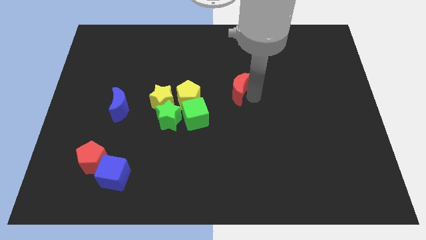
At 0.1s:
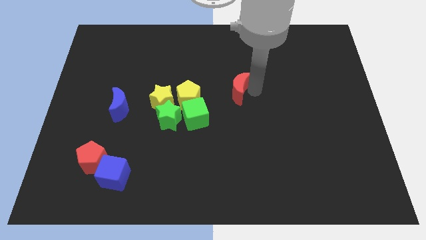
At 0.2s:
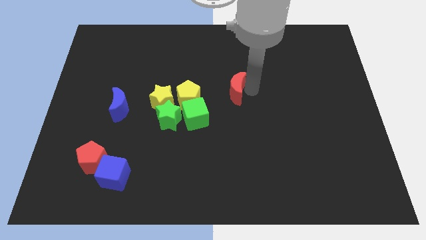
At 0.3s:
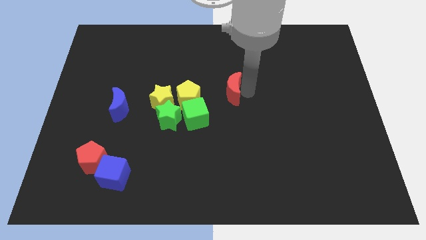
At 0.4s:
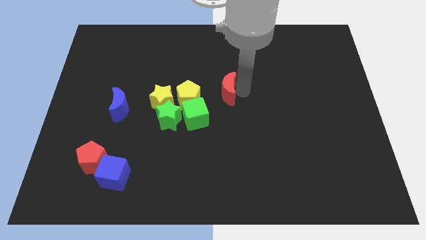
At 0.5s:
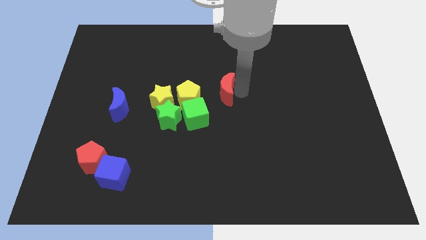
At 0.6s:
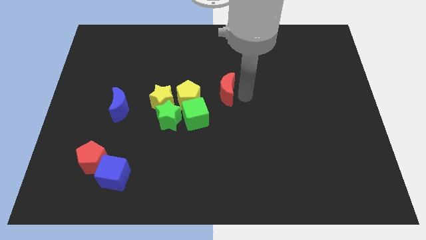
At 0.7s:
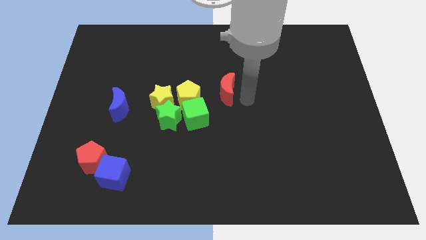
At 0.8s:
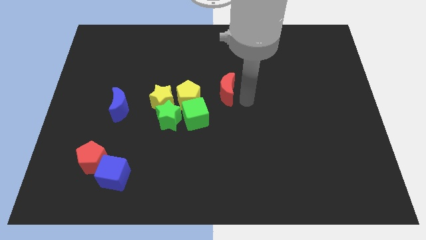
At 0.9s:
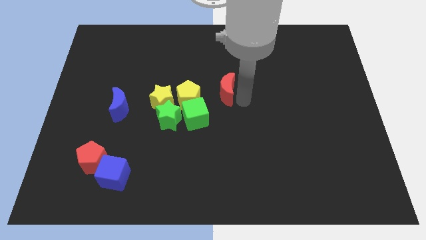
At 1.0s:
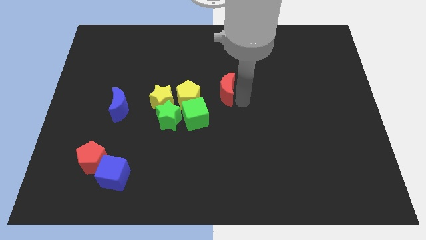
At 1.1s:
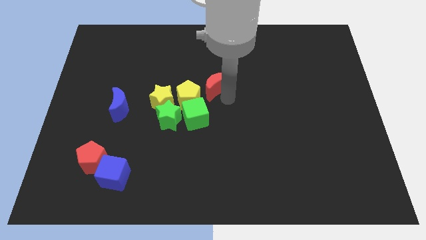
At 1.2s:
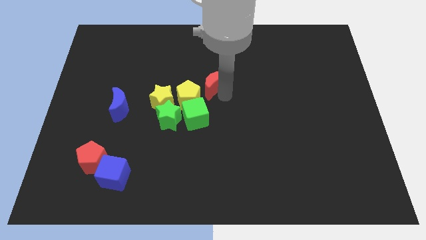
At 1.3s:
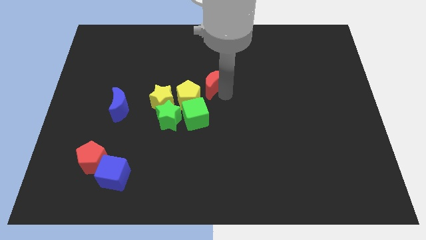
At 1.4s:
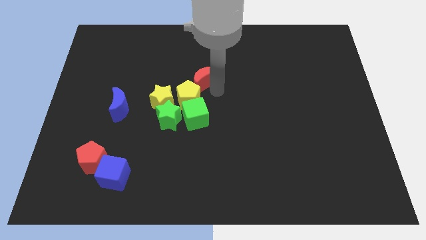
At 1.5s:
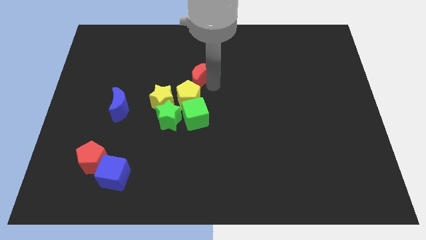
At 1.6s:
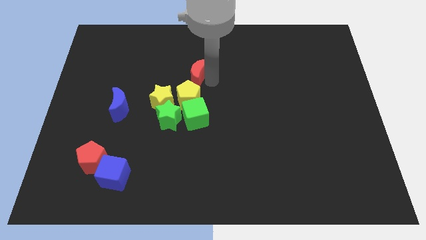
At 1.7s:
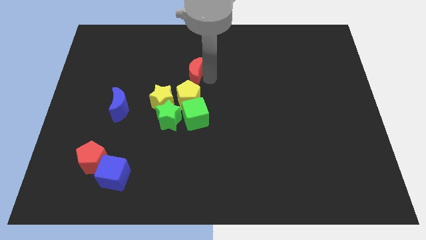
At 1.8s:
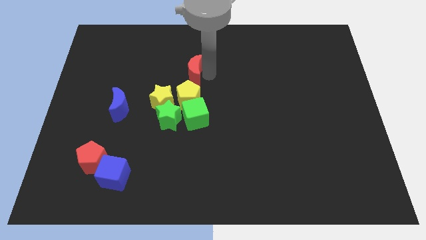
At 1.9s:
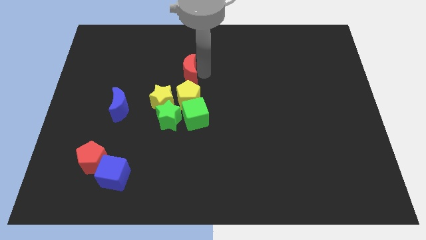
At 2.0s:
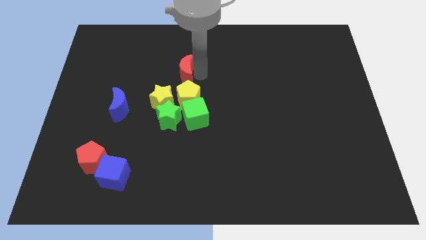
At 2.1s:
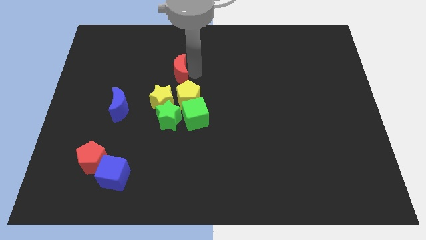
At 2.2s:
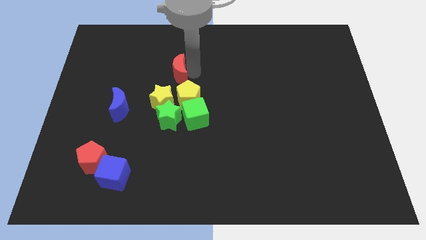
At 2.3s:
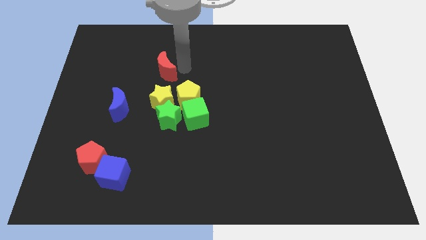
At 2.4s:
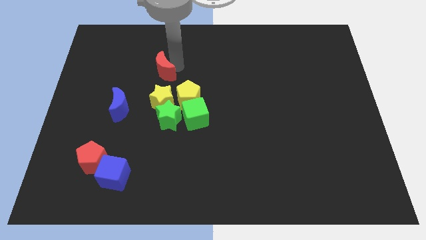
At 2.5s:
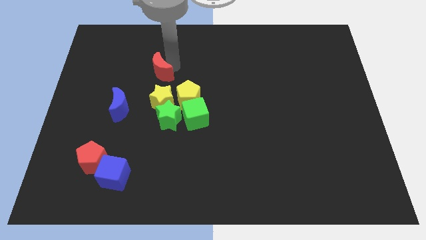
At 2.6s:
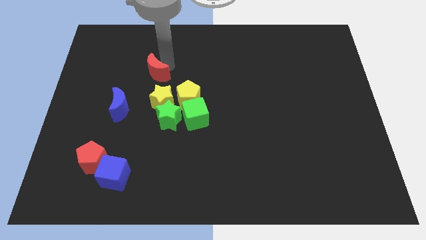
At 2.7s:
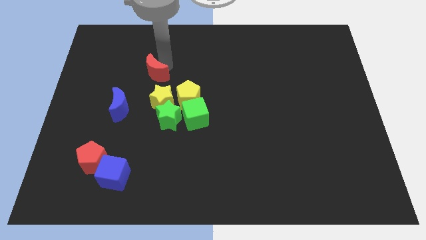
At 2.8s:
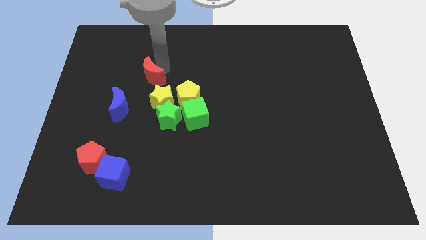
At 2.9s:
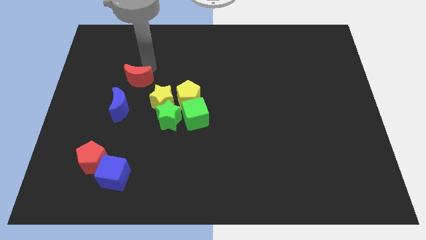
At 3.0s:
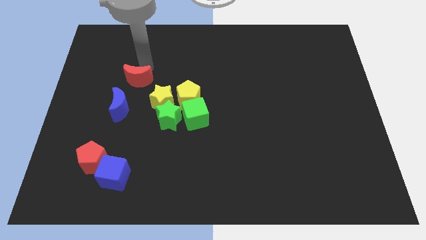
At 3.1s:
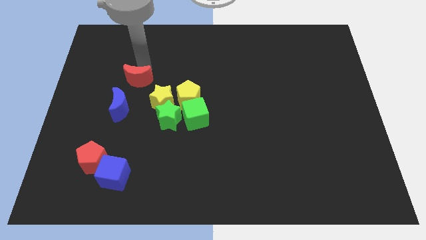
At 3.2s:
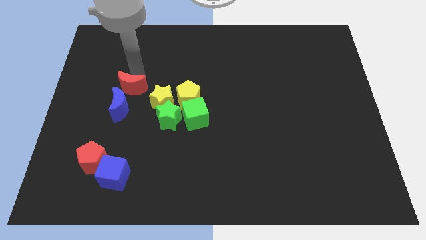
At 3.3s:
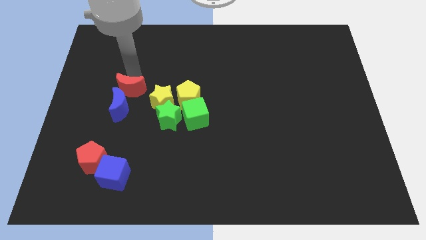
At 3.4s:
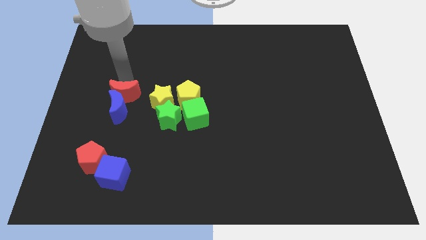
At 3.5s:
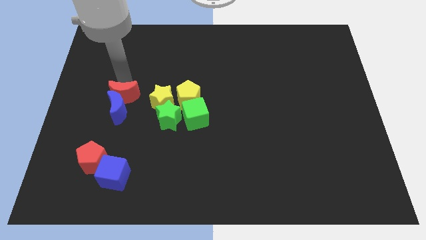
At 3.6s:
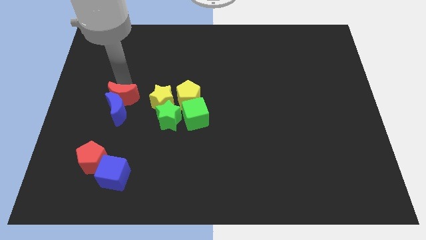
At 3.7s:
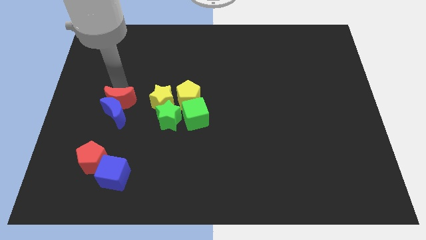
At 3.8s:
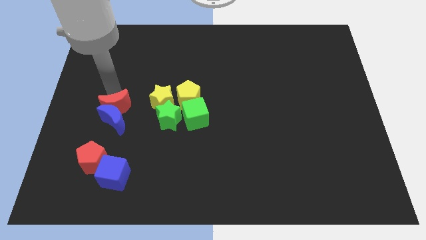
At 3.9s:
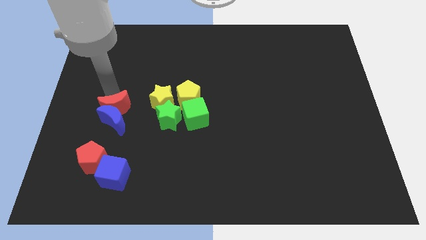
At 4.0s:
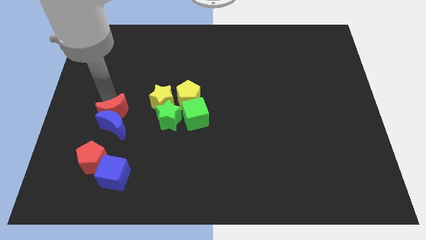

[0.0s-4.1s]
push red moon into blue moon

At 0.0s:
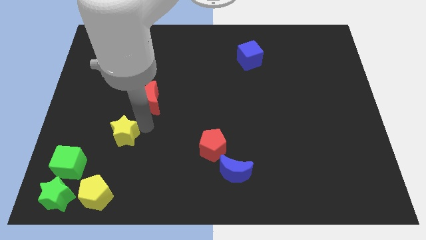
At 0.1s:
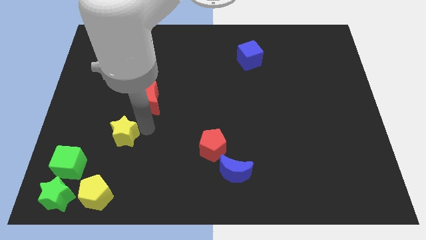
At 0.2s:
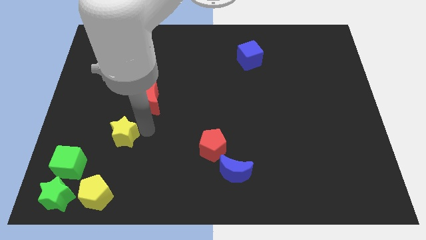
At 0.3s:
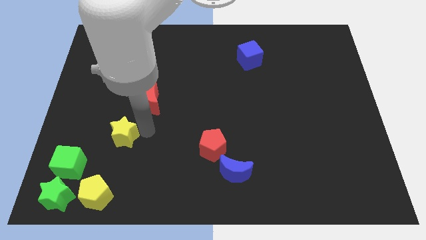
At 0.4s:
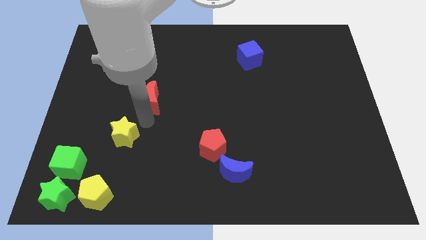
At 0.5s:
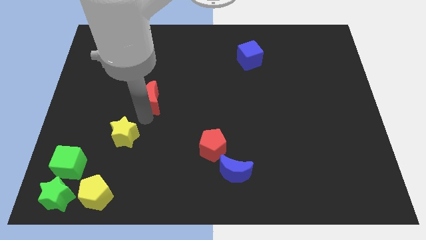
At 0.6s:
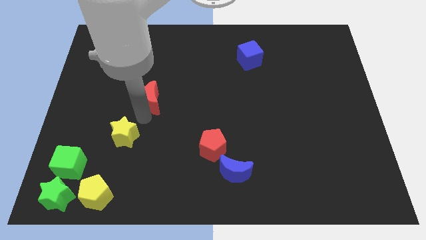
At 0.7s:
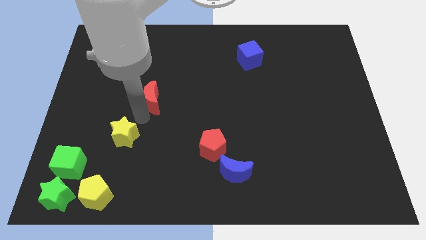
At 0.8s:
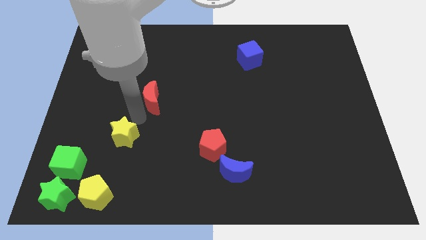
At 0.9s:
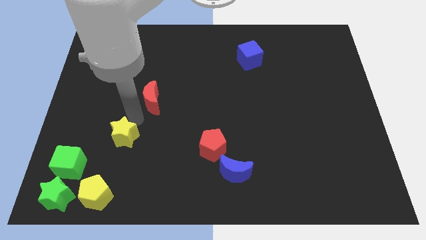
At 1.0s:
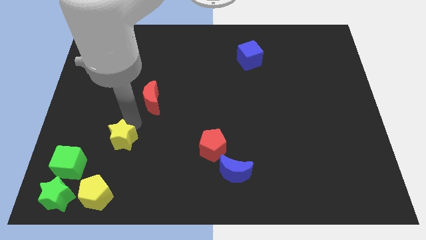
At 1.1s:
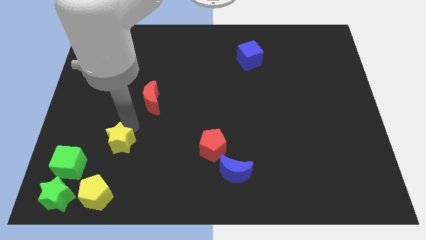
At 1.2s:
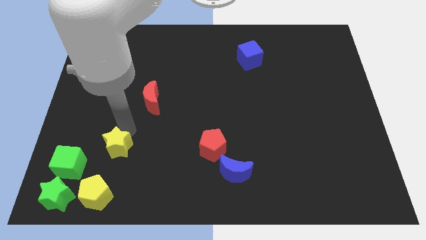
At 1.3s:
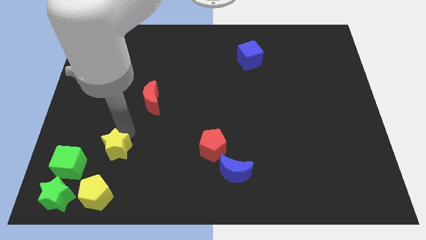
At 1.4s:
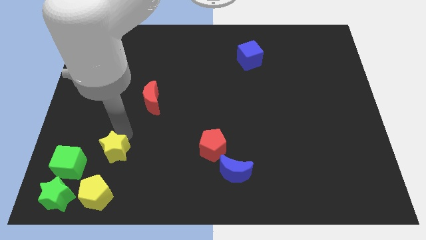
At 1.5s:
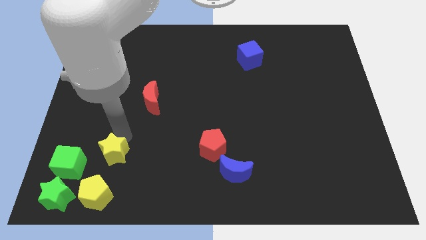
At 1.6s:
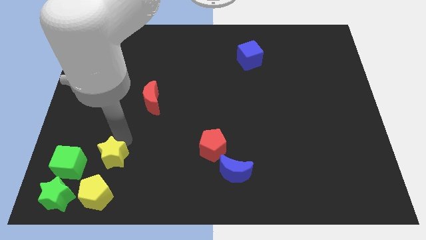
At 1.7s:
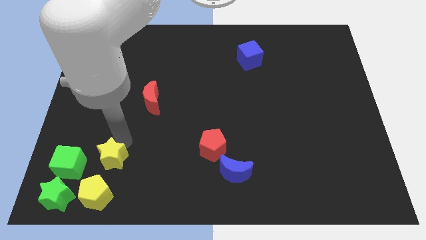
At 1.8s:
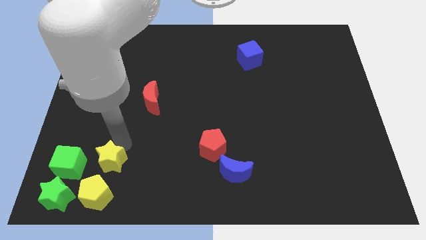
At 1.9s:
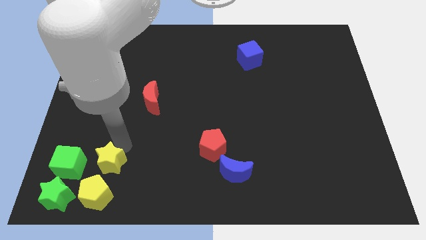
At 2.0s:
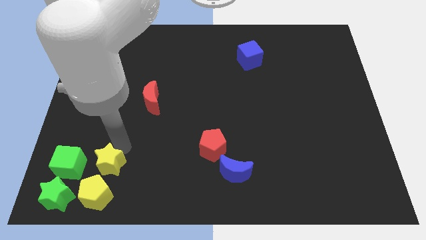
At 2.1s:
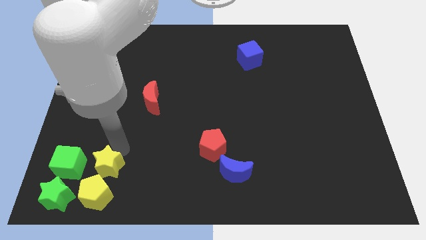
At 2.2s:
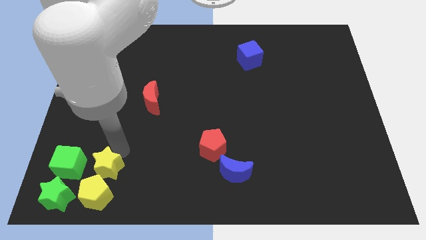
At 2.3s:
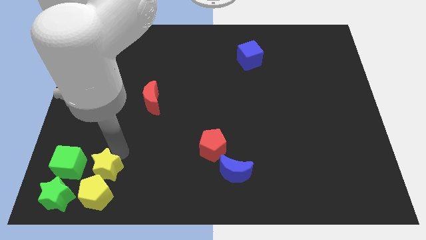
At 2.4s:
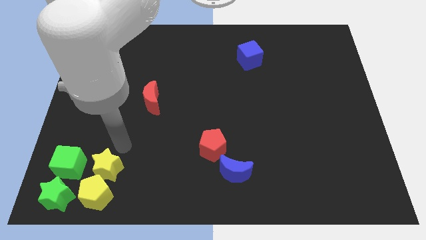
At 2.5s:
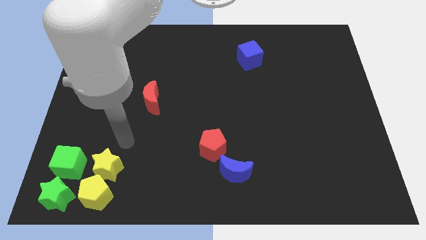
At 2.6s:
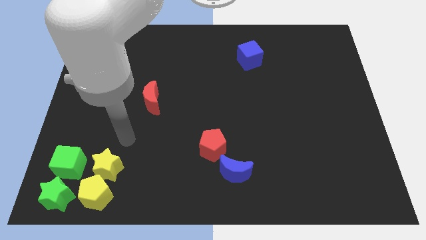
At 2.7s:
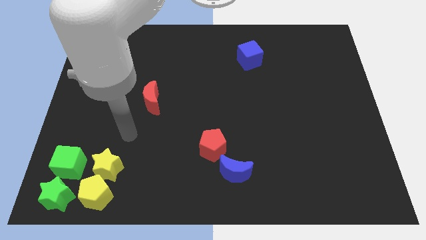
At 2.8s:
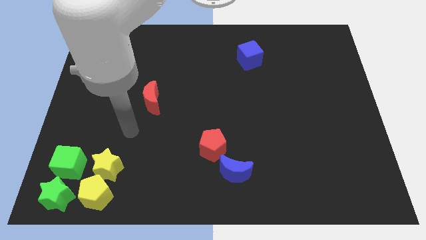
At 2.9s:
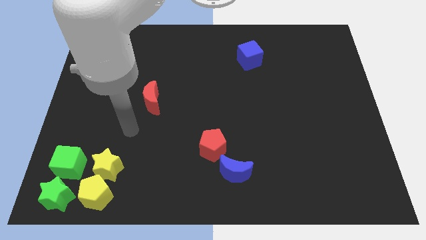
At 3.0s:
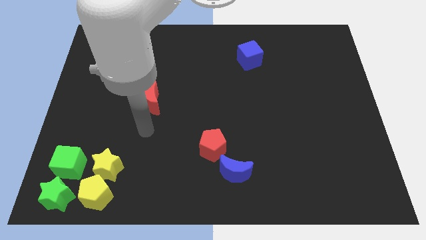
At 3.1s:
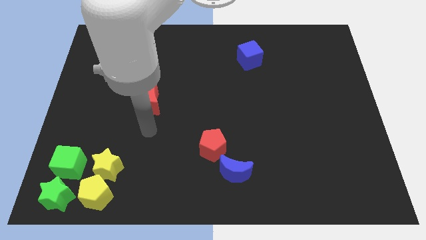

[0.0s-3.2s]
move yellow star into the group of blocks

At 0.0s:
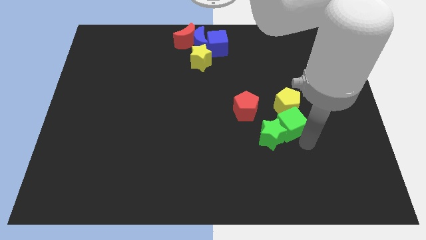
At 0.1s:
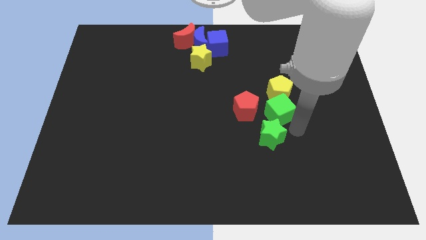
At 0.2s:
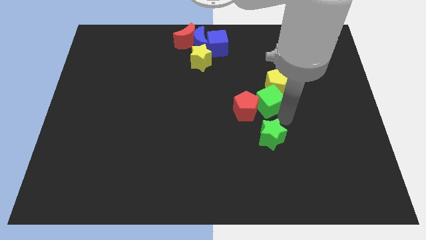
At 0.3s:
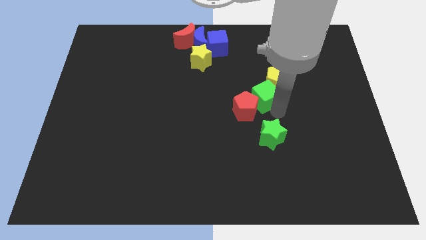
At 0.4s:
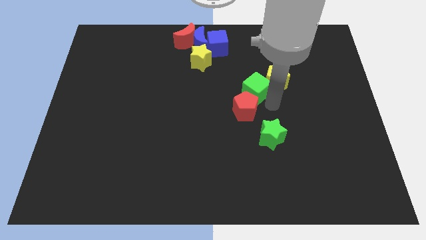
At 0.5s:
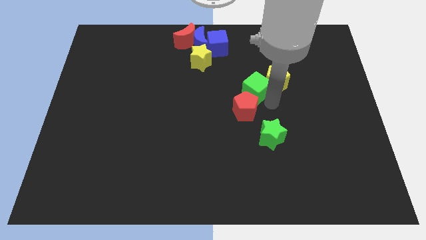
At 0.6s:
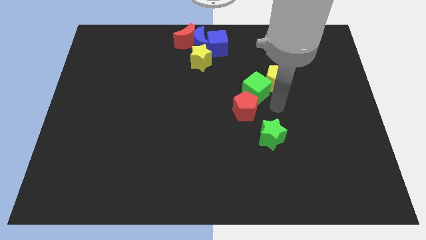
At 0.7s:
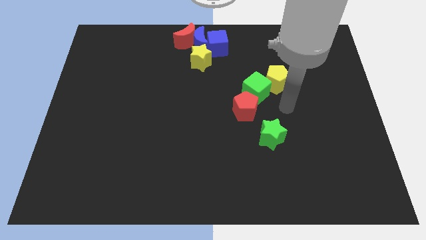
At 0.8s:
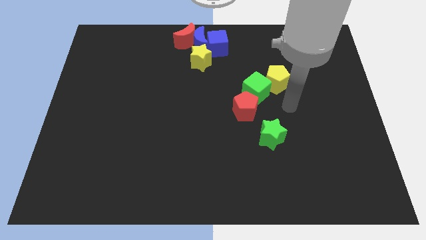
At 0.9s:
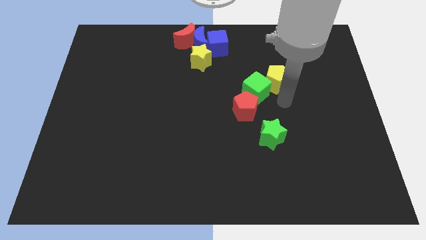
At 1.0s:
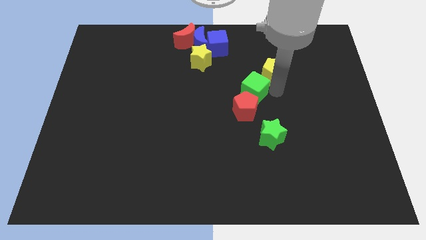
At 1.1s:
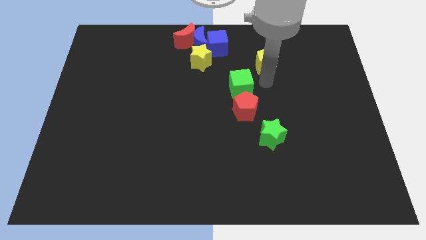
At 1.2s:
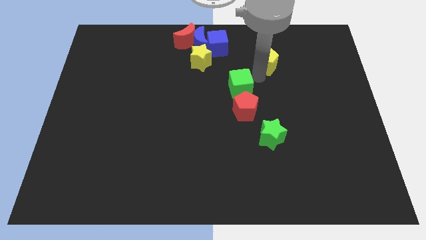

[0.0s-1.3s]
separate green cube and yellow pentagon

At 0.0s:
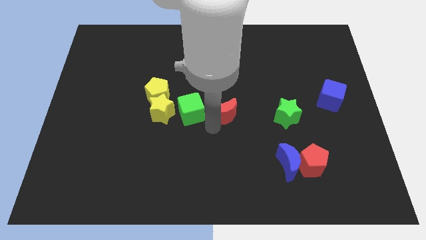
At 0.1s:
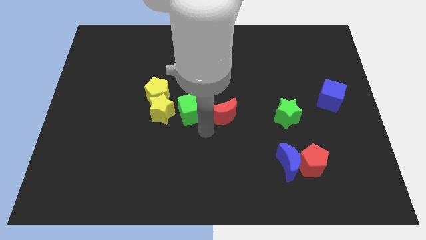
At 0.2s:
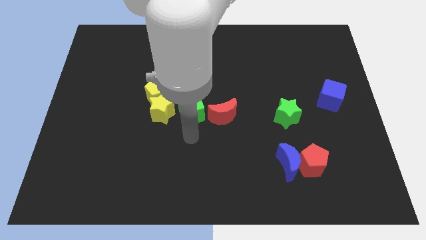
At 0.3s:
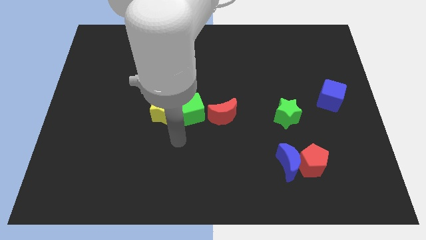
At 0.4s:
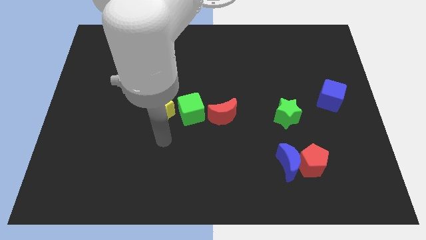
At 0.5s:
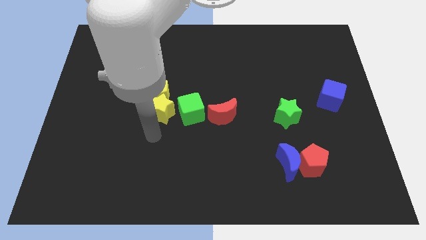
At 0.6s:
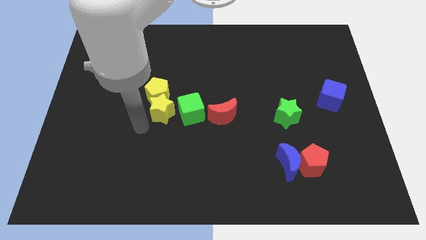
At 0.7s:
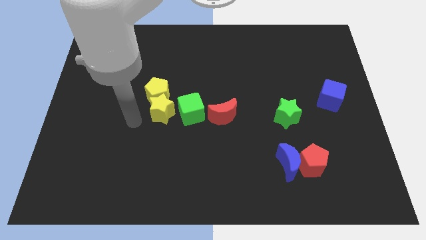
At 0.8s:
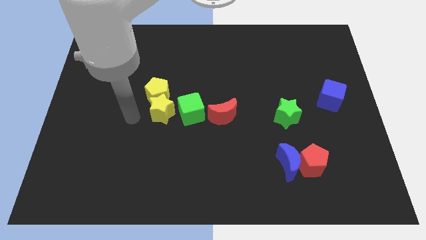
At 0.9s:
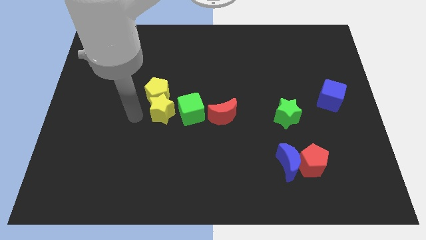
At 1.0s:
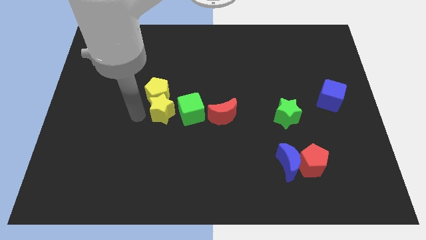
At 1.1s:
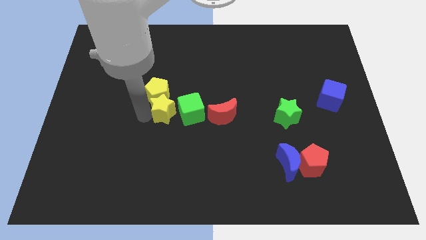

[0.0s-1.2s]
point your arm to the left side of yellow star
